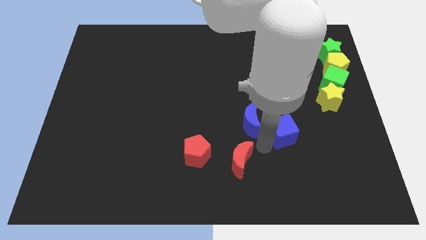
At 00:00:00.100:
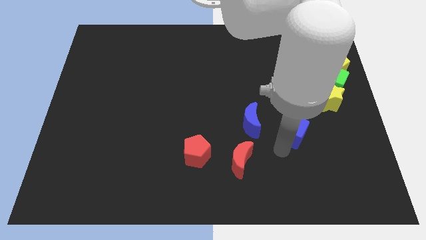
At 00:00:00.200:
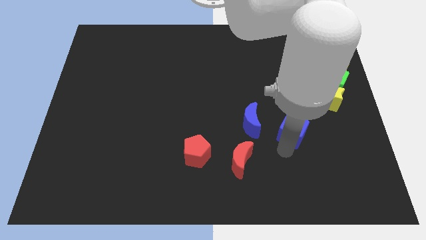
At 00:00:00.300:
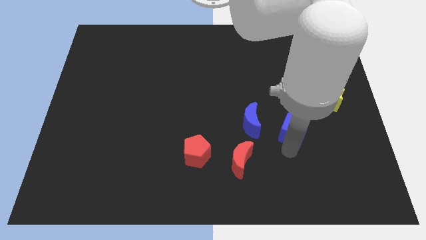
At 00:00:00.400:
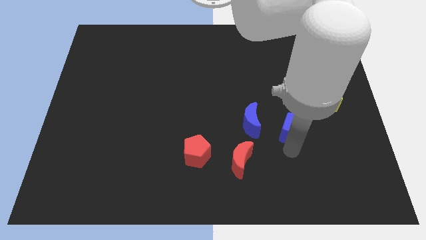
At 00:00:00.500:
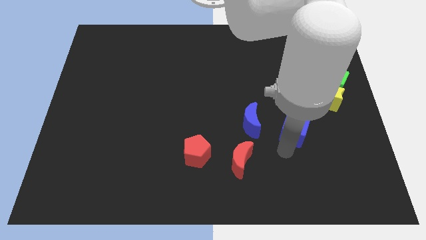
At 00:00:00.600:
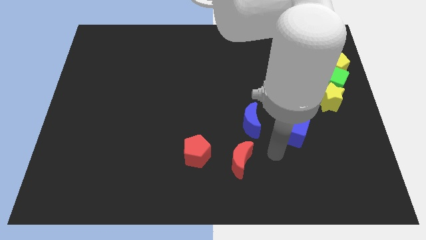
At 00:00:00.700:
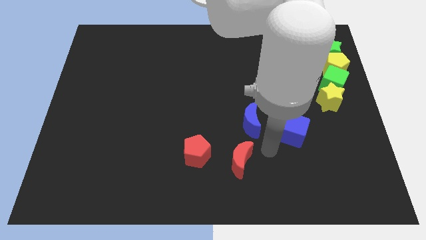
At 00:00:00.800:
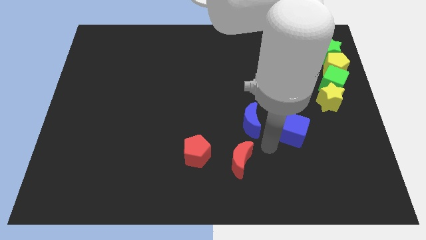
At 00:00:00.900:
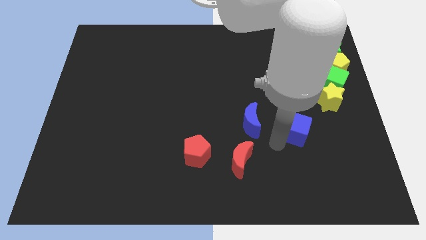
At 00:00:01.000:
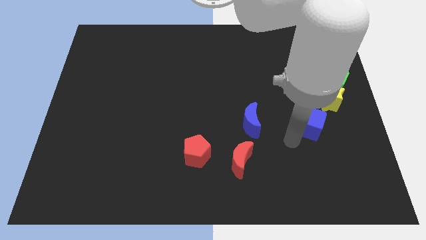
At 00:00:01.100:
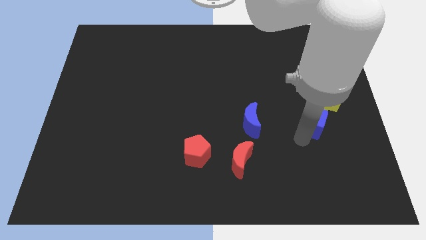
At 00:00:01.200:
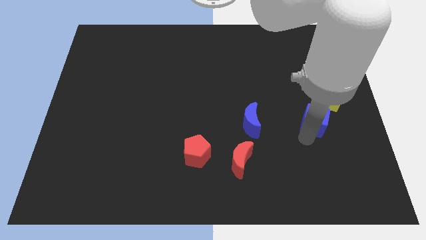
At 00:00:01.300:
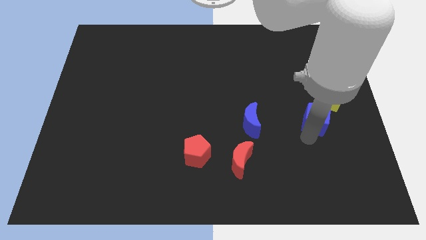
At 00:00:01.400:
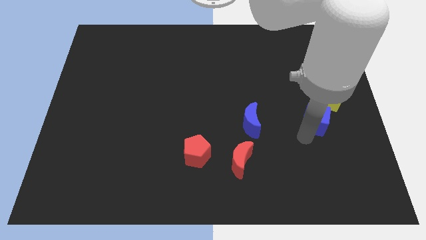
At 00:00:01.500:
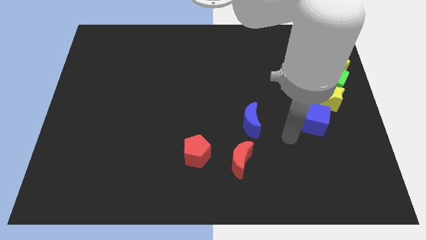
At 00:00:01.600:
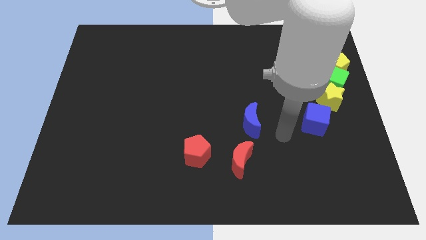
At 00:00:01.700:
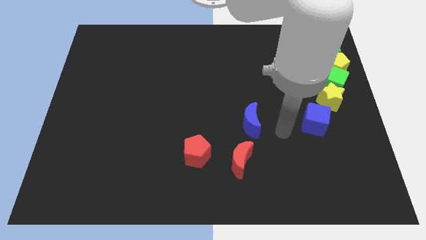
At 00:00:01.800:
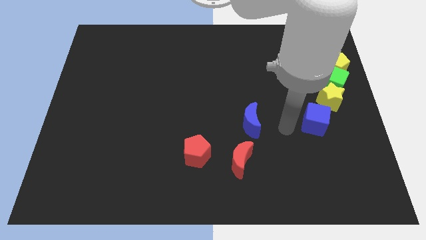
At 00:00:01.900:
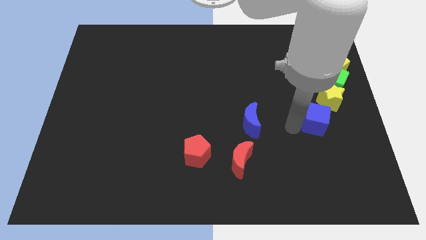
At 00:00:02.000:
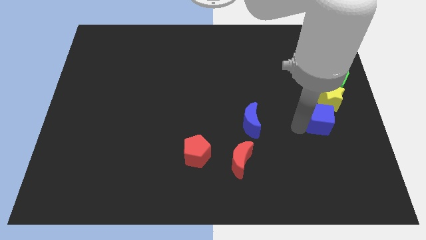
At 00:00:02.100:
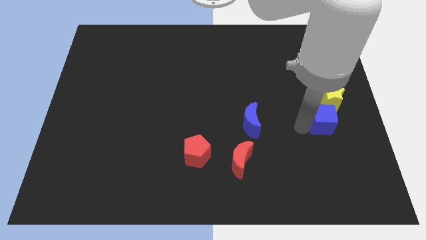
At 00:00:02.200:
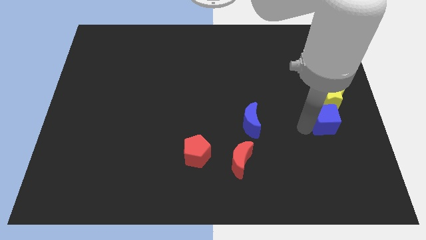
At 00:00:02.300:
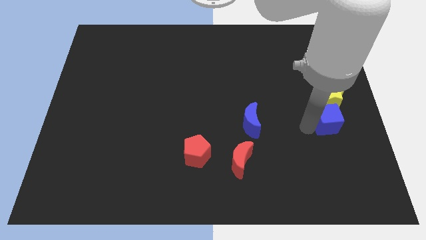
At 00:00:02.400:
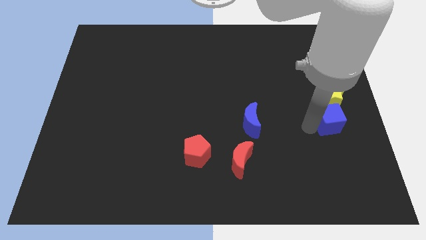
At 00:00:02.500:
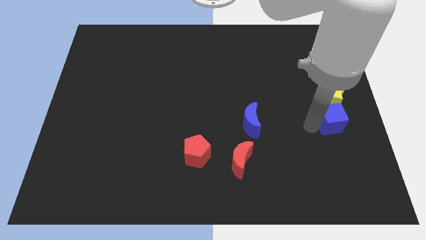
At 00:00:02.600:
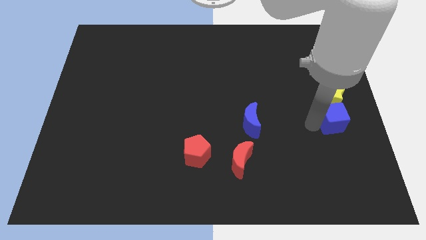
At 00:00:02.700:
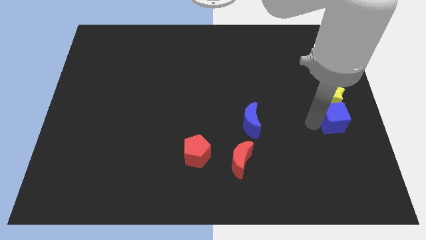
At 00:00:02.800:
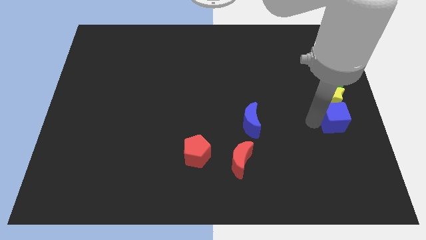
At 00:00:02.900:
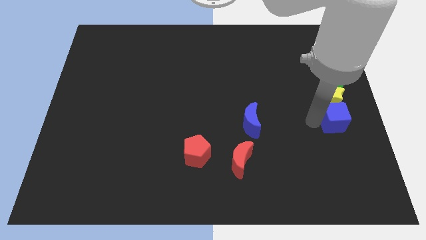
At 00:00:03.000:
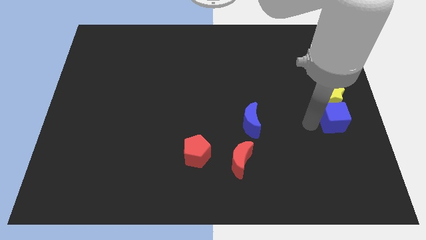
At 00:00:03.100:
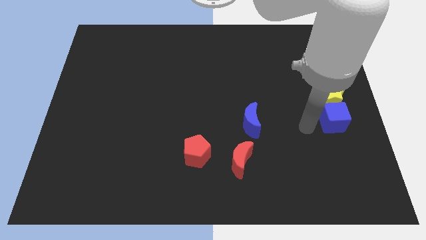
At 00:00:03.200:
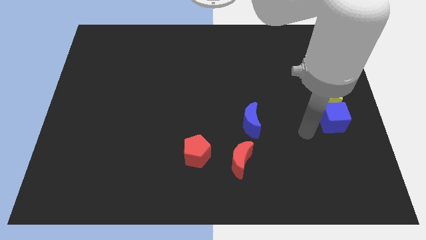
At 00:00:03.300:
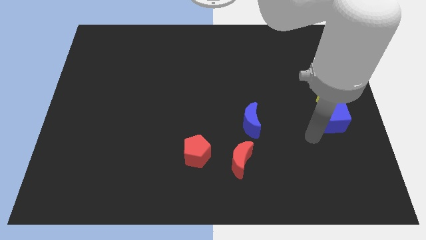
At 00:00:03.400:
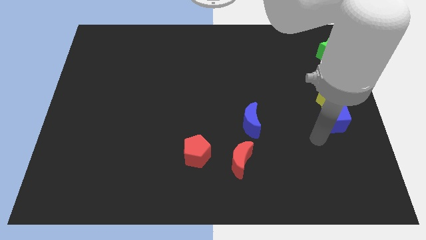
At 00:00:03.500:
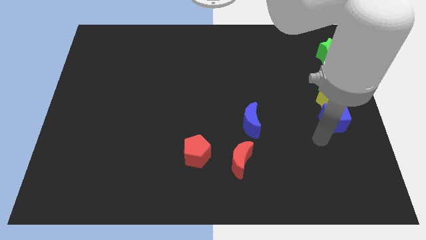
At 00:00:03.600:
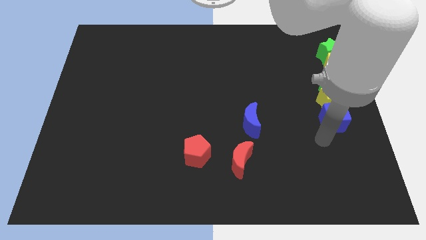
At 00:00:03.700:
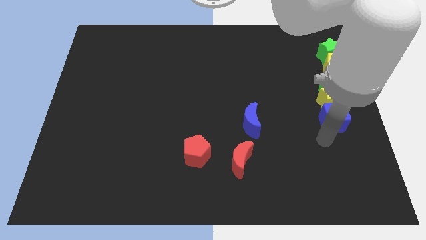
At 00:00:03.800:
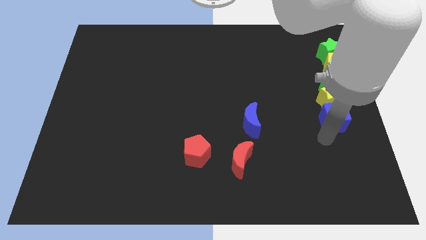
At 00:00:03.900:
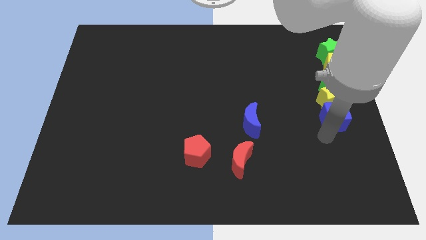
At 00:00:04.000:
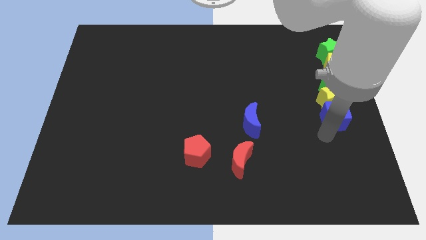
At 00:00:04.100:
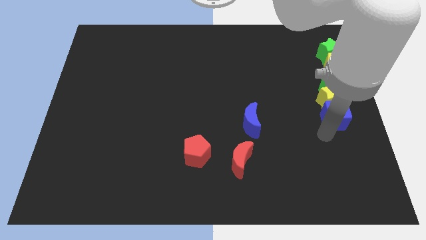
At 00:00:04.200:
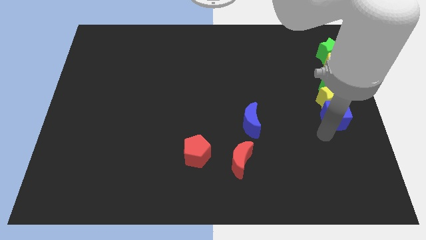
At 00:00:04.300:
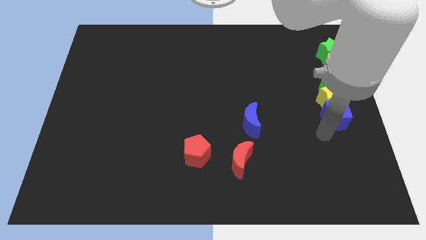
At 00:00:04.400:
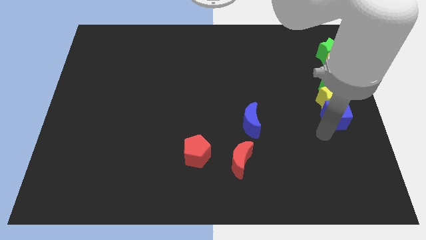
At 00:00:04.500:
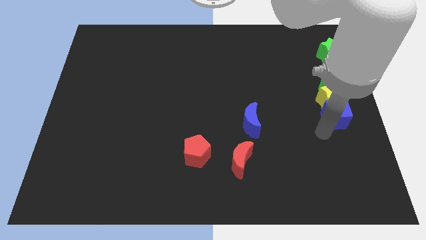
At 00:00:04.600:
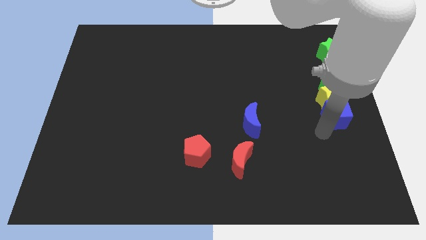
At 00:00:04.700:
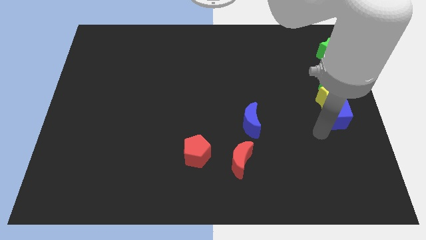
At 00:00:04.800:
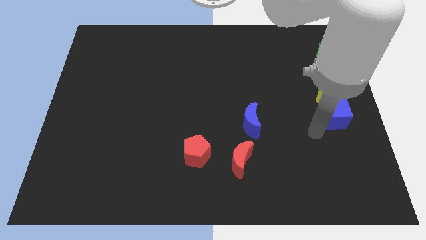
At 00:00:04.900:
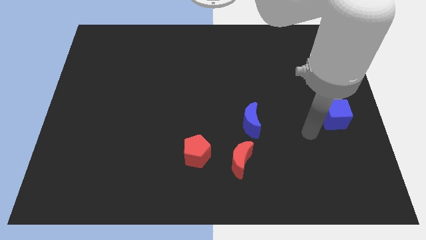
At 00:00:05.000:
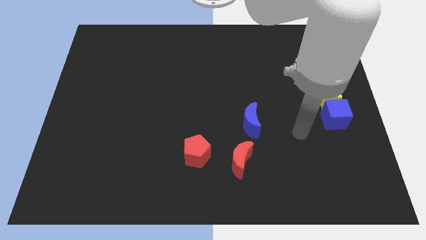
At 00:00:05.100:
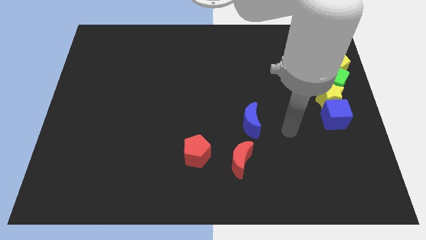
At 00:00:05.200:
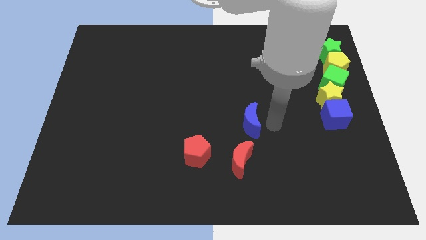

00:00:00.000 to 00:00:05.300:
move the blue cube below to the yellow star

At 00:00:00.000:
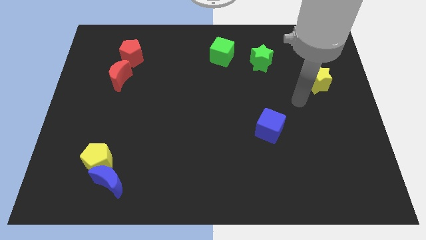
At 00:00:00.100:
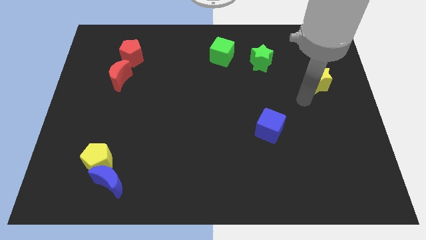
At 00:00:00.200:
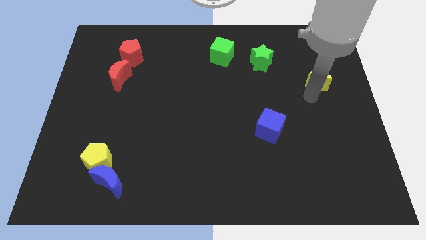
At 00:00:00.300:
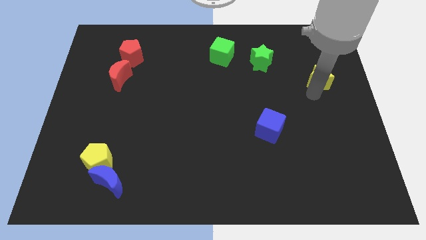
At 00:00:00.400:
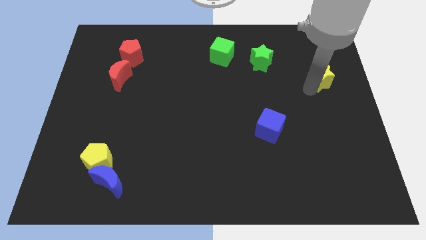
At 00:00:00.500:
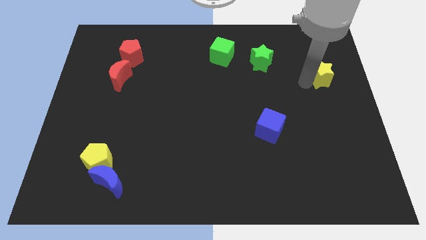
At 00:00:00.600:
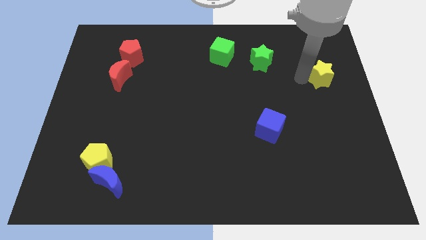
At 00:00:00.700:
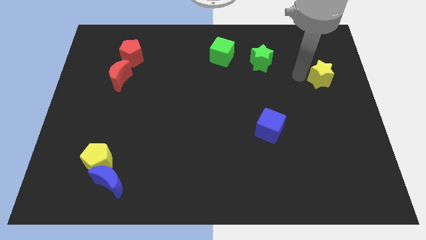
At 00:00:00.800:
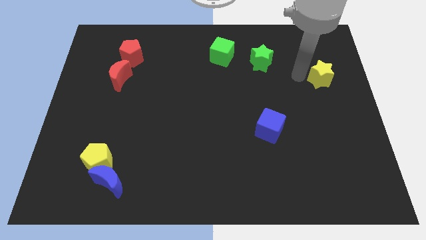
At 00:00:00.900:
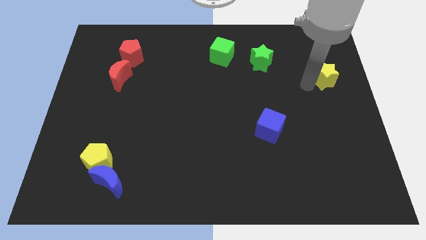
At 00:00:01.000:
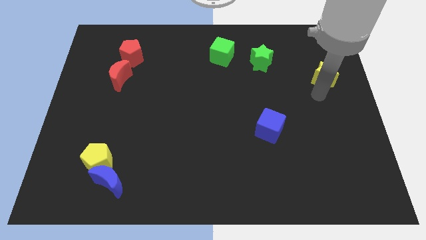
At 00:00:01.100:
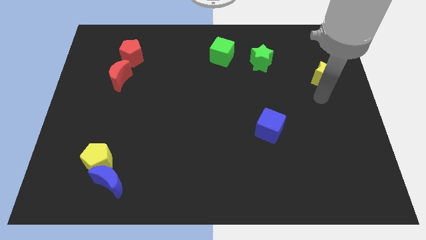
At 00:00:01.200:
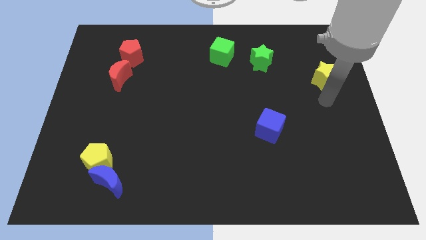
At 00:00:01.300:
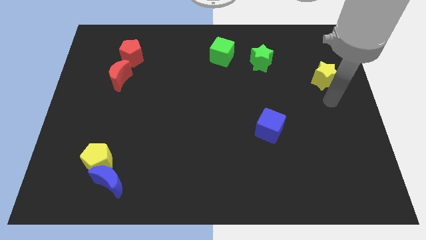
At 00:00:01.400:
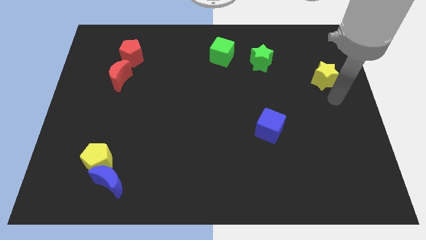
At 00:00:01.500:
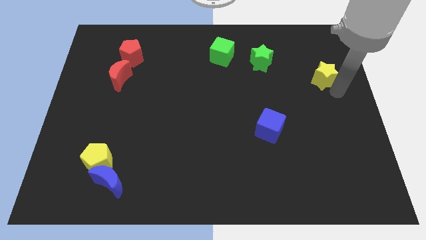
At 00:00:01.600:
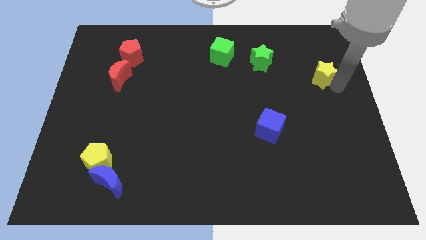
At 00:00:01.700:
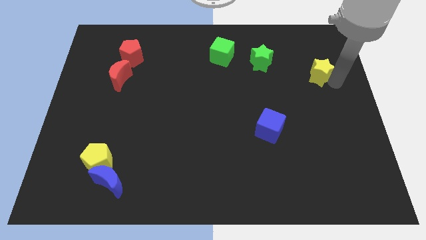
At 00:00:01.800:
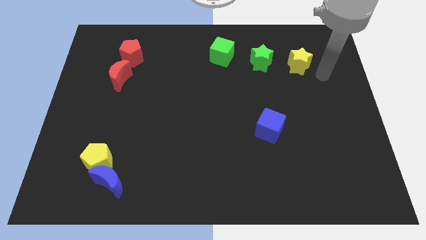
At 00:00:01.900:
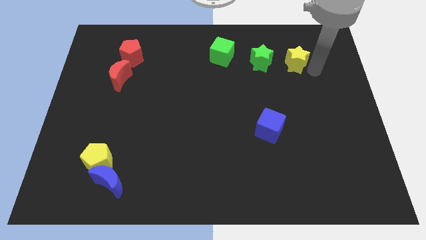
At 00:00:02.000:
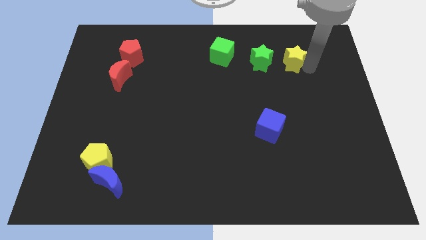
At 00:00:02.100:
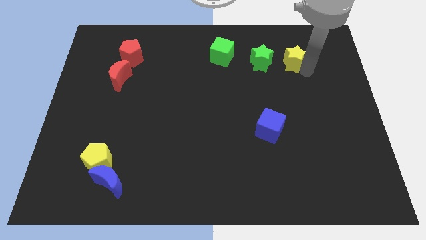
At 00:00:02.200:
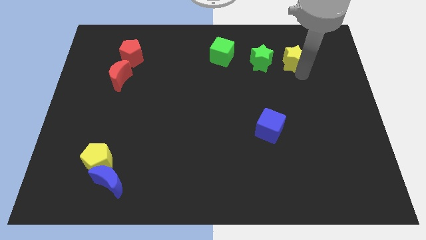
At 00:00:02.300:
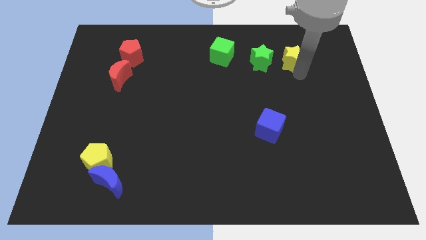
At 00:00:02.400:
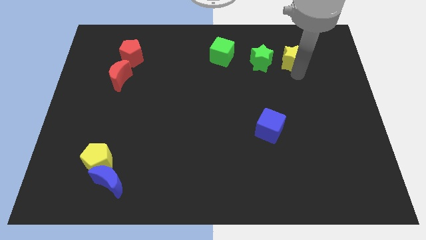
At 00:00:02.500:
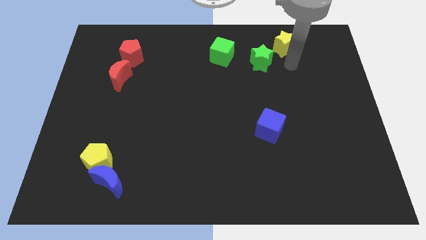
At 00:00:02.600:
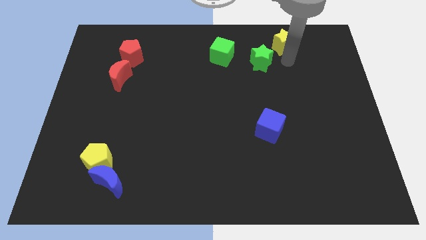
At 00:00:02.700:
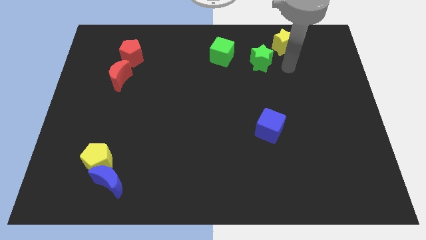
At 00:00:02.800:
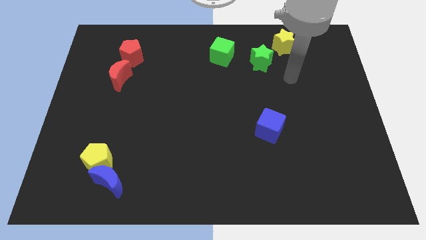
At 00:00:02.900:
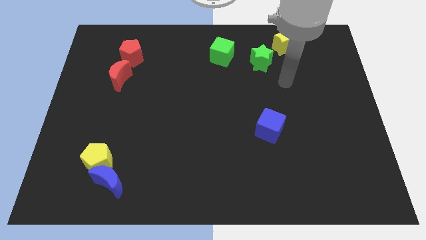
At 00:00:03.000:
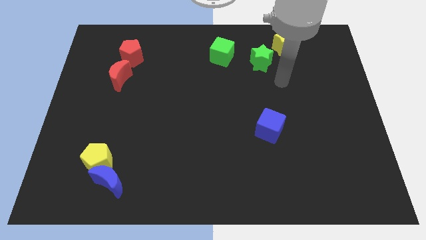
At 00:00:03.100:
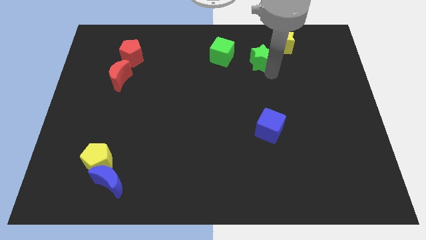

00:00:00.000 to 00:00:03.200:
adjust the yellow star on the top right of the green star

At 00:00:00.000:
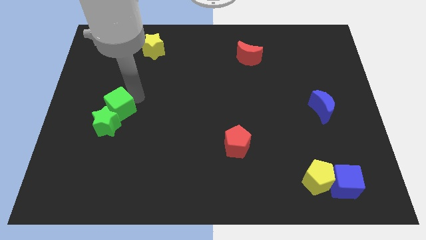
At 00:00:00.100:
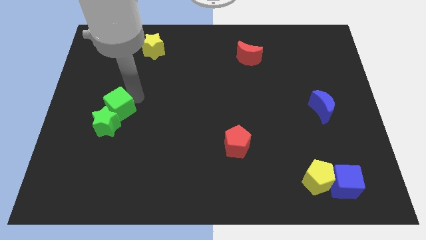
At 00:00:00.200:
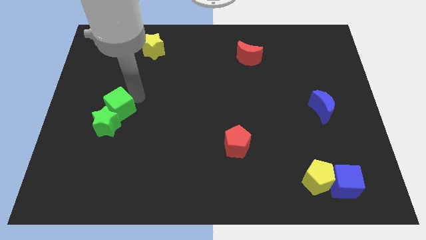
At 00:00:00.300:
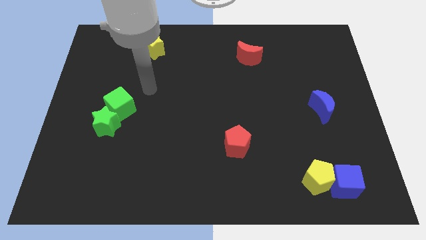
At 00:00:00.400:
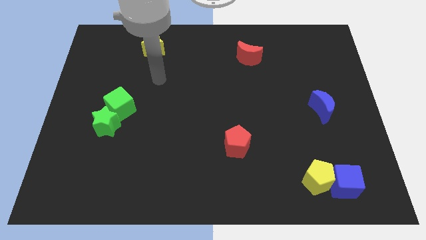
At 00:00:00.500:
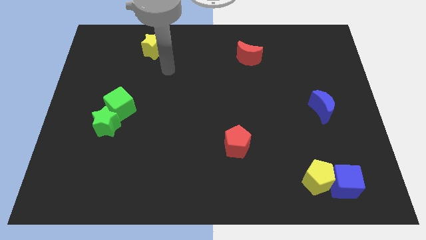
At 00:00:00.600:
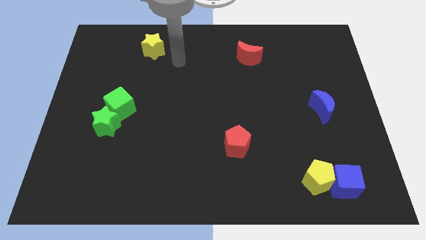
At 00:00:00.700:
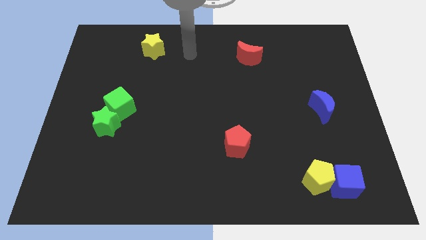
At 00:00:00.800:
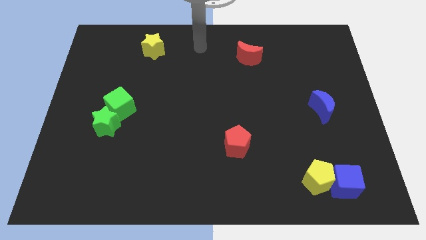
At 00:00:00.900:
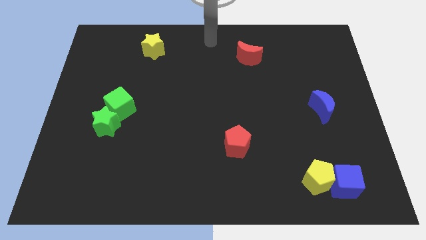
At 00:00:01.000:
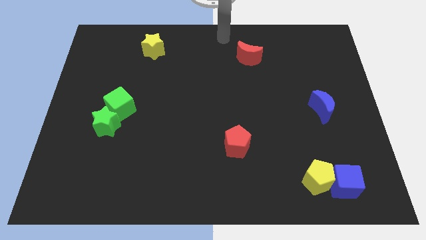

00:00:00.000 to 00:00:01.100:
move your arm away from green cube
